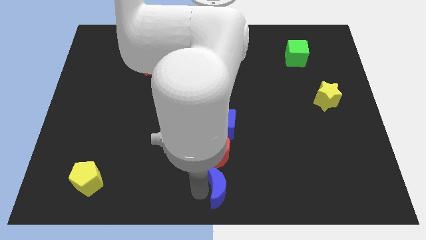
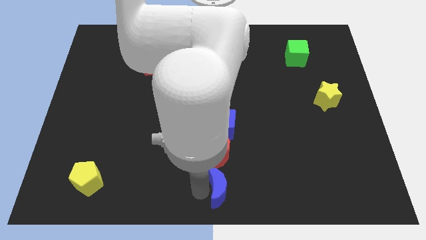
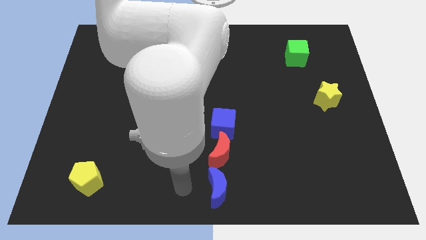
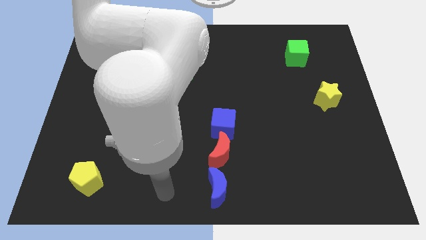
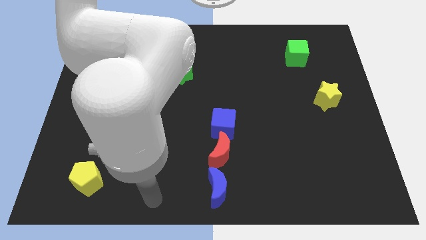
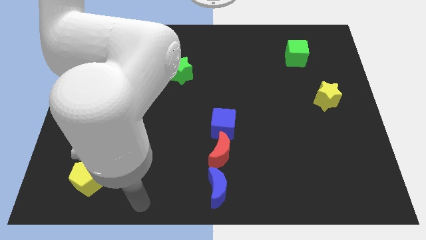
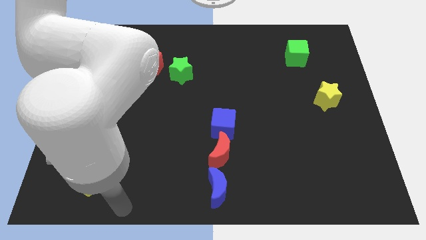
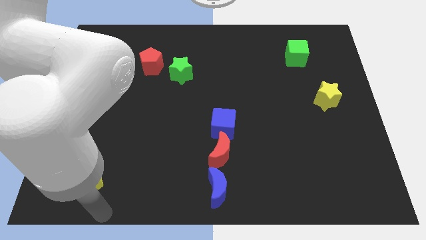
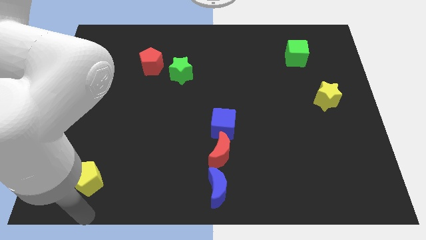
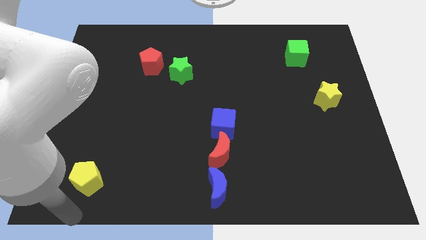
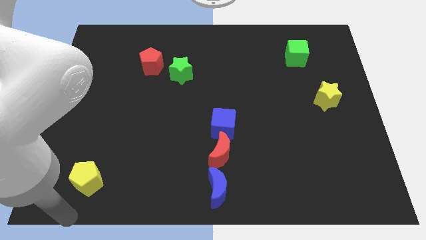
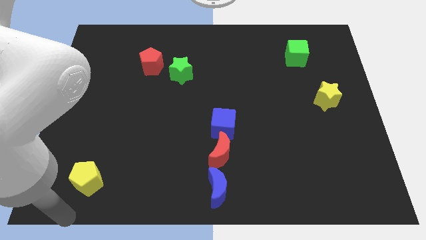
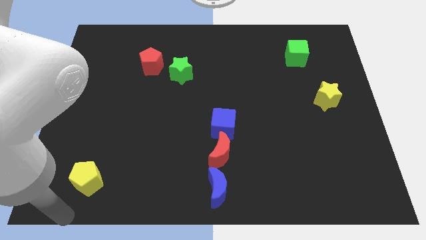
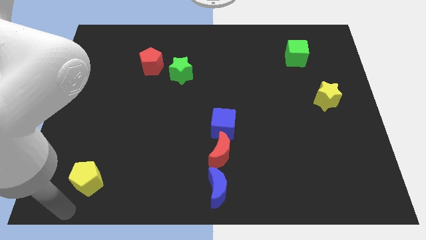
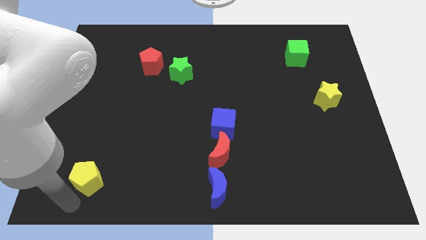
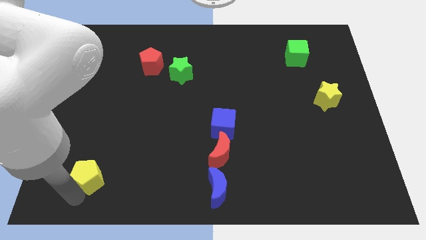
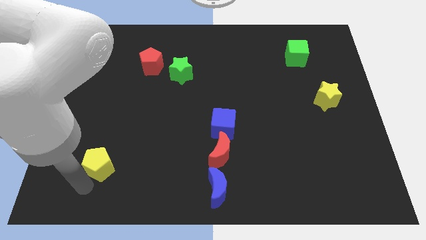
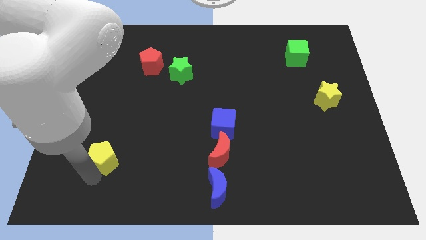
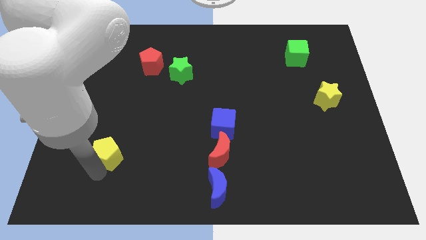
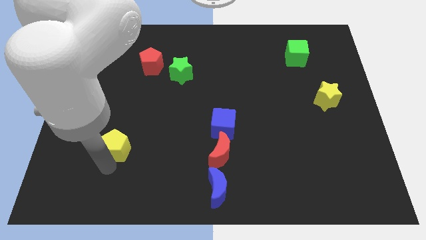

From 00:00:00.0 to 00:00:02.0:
push the yellow pentagon parallel to red moon

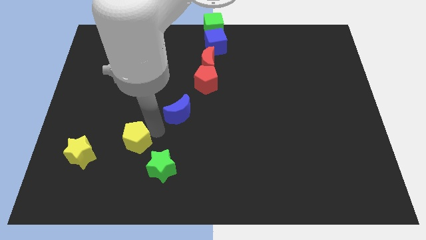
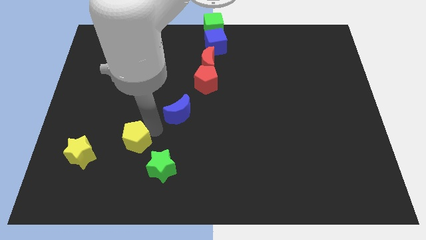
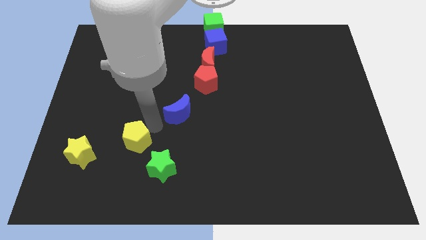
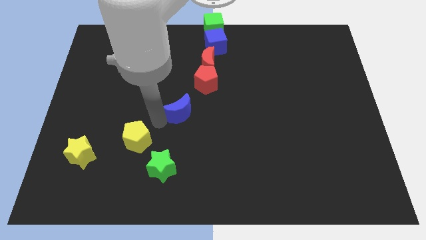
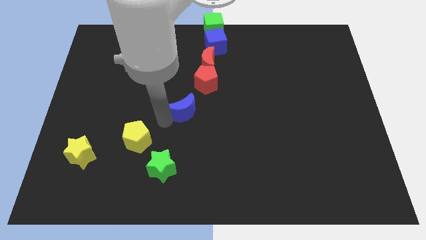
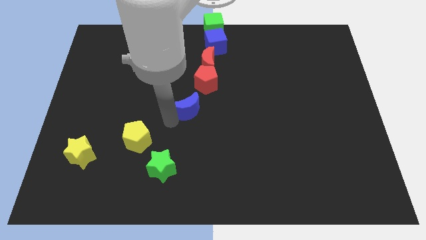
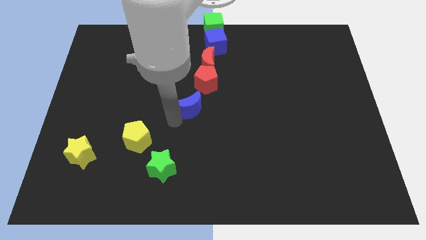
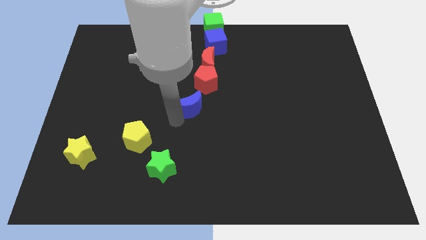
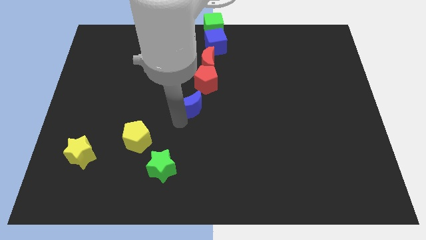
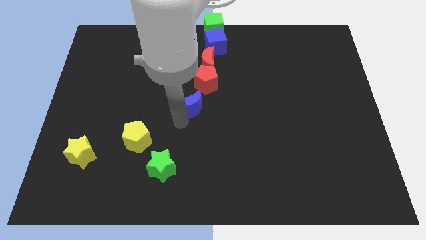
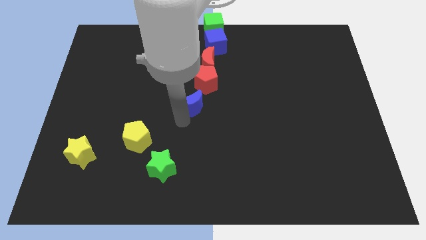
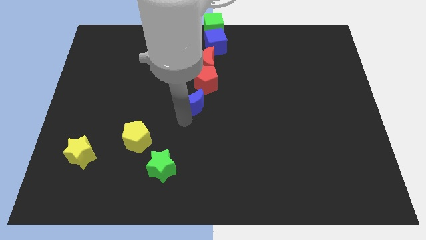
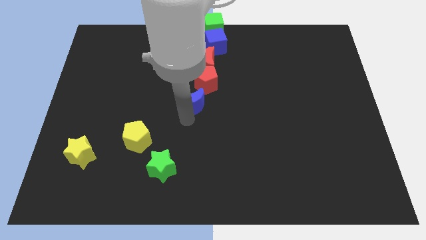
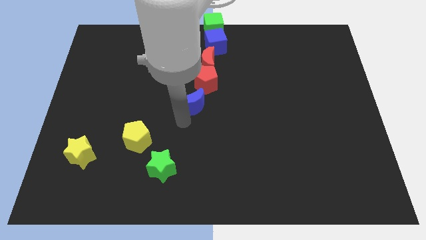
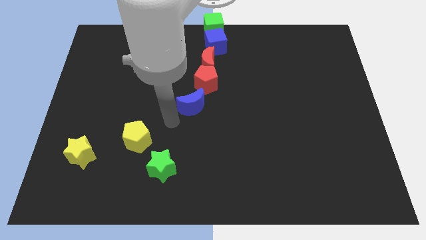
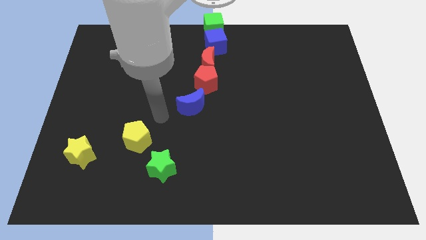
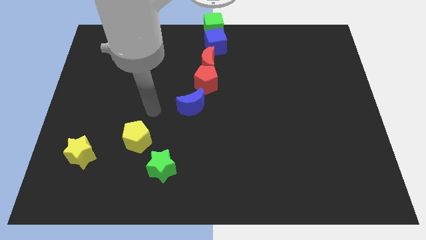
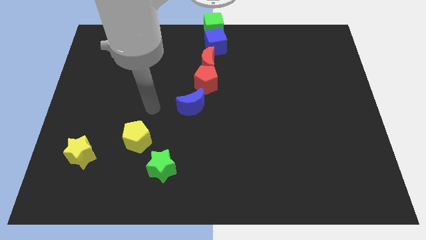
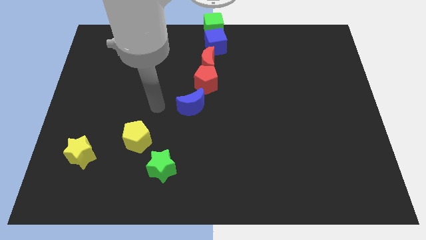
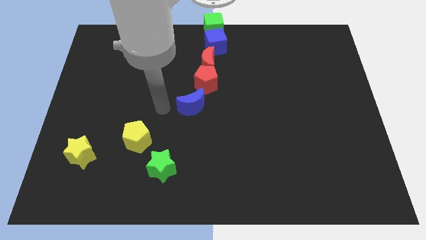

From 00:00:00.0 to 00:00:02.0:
drag the blue crescent towards top

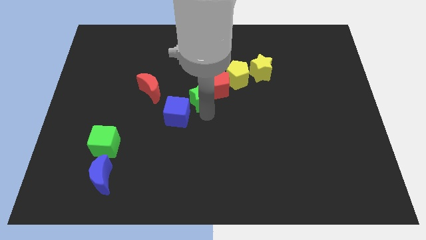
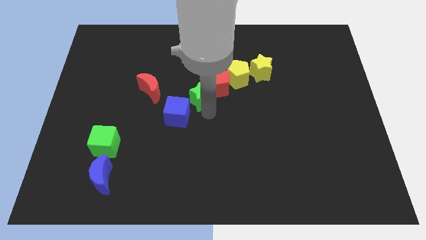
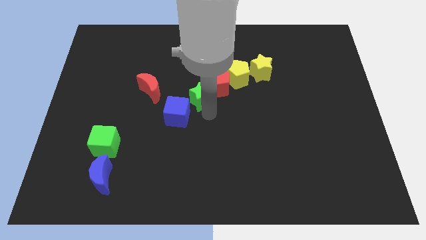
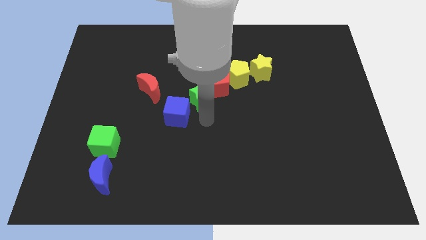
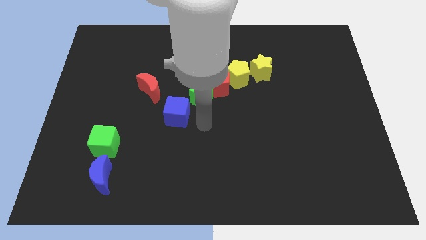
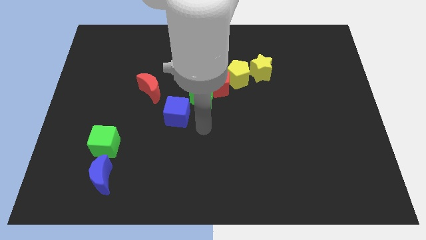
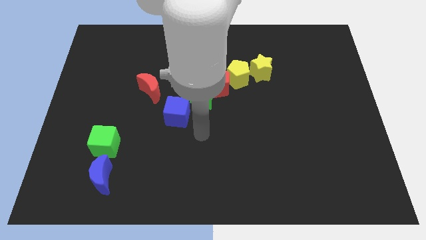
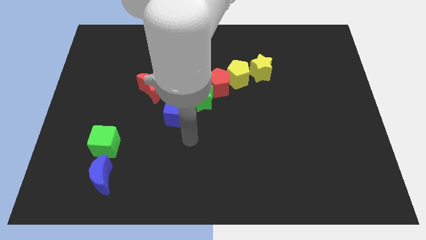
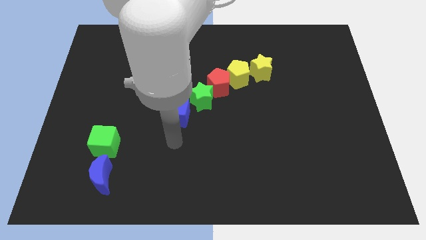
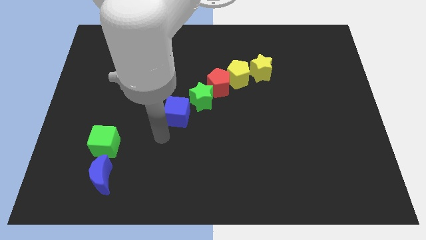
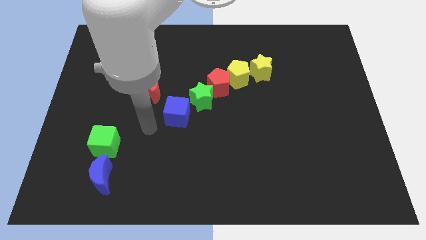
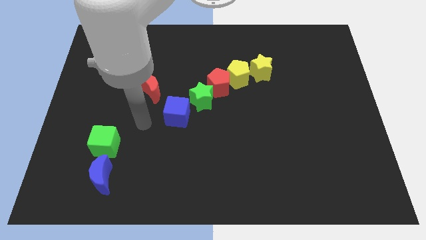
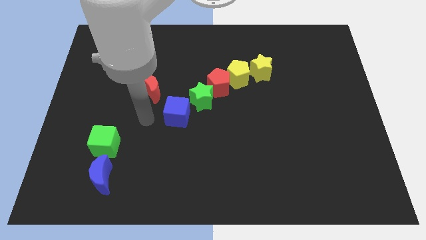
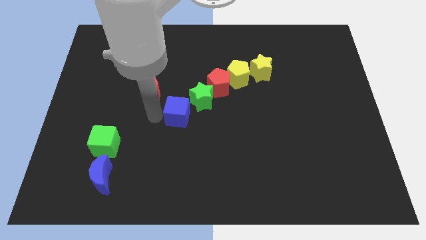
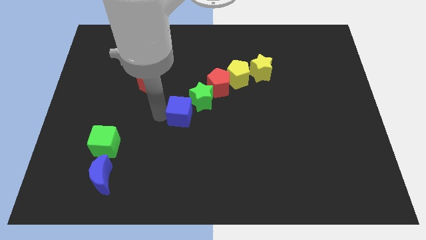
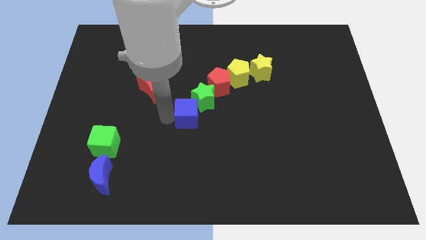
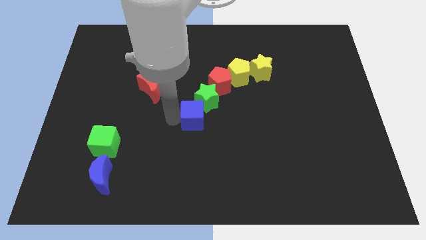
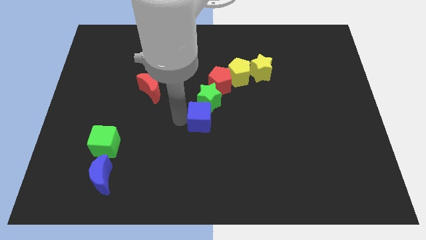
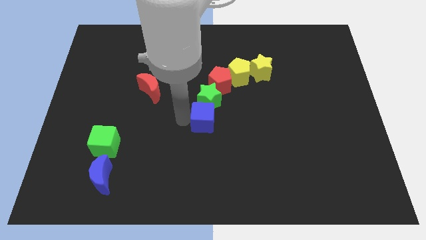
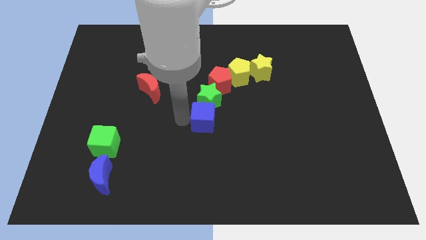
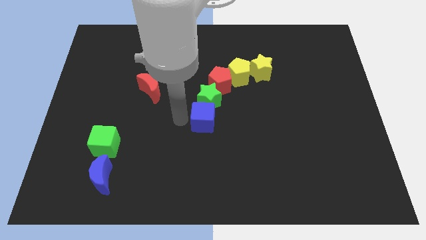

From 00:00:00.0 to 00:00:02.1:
push the blue cube into the green star

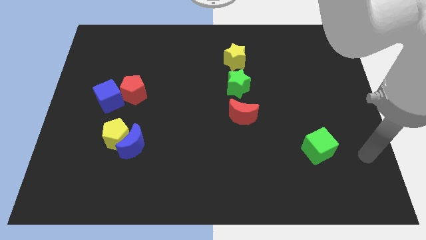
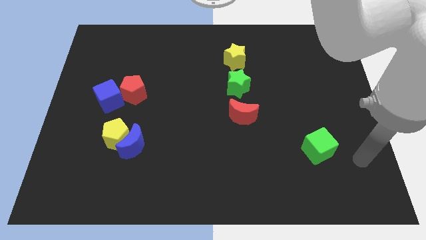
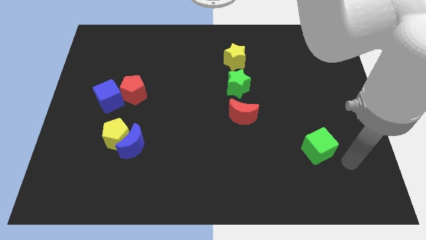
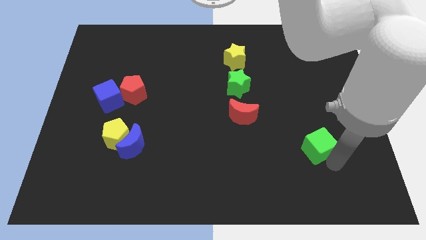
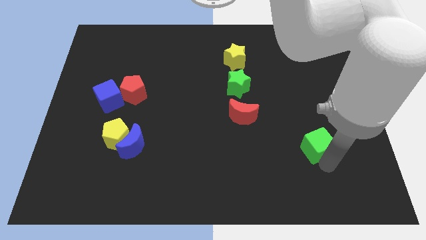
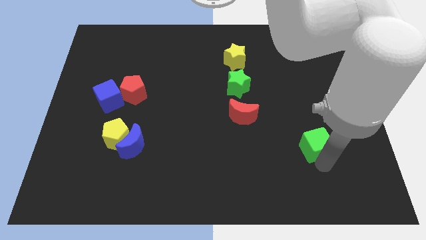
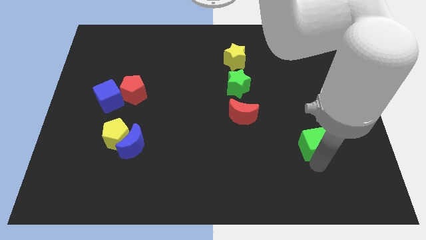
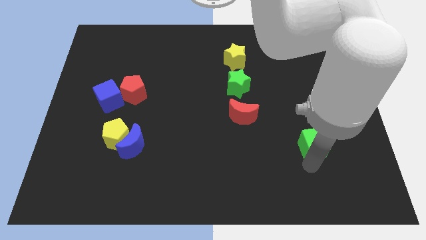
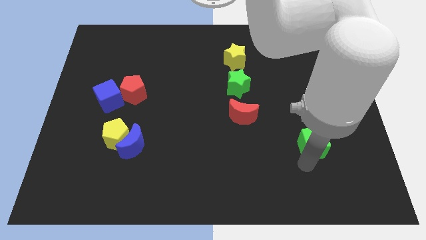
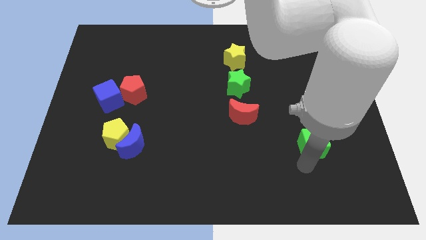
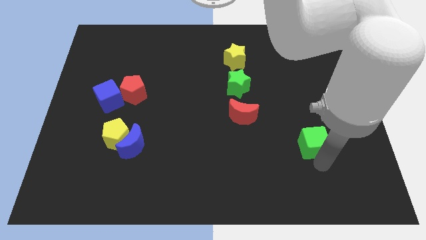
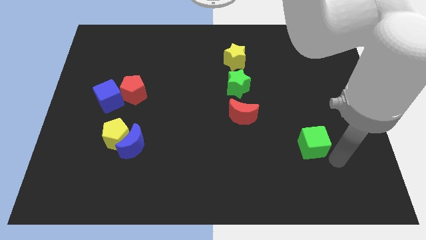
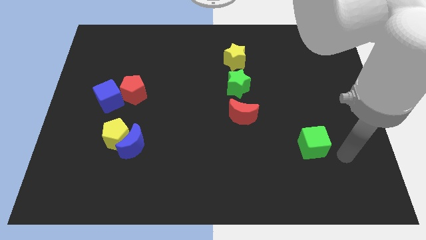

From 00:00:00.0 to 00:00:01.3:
touch the bottom side of the green cube

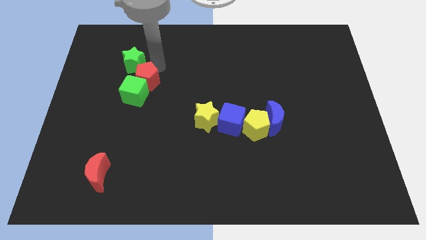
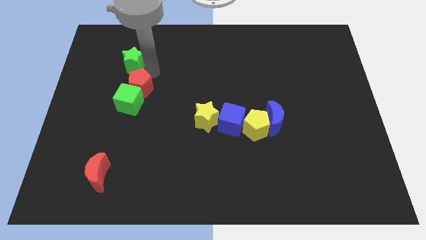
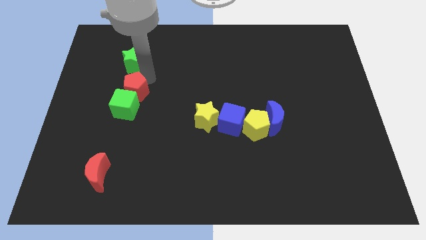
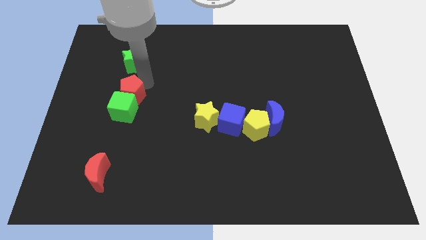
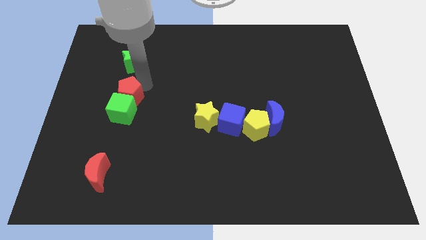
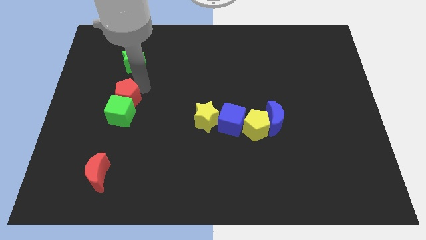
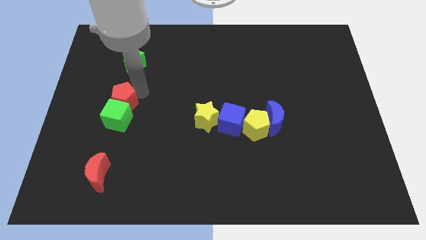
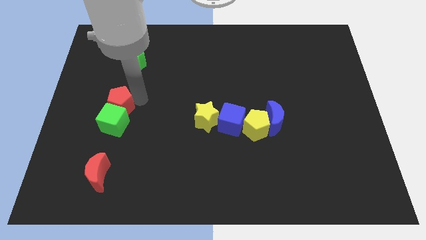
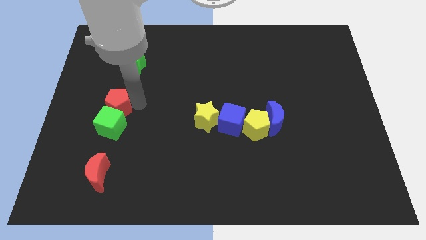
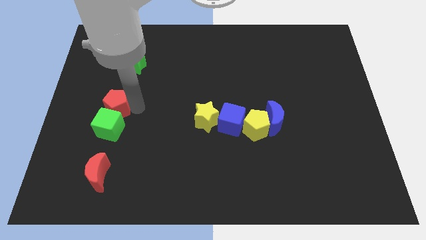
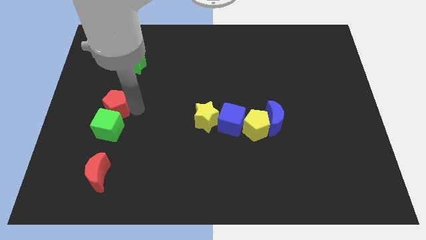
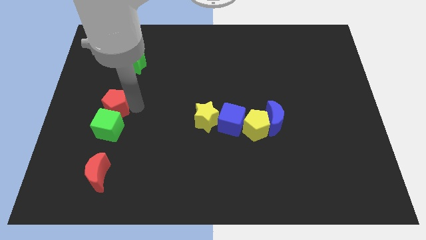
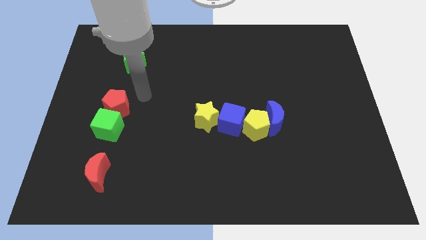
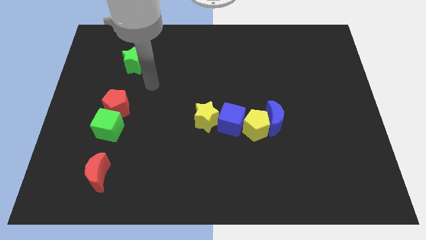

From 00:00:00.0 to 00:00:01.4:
place the red pentagon and green cube above the red moon
